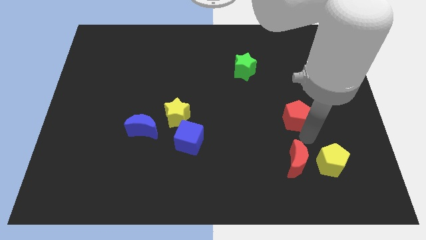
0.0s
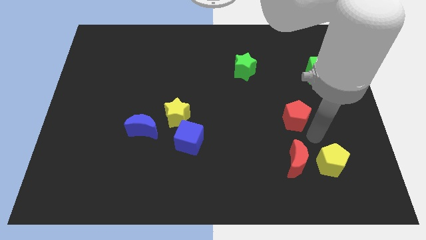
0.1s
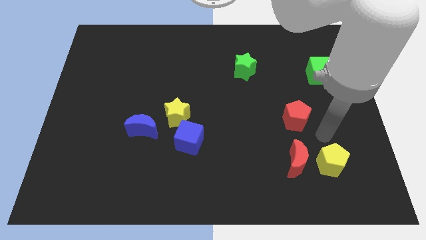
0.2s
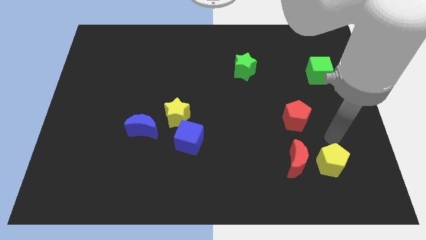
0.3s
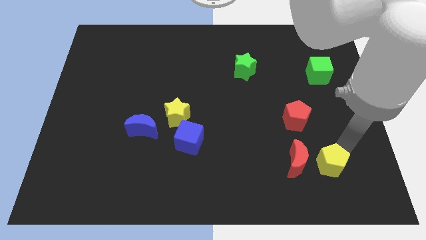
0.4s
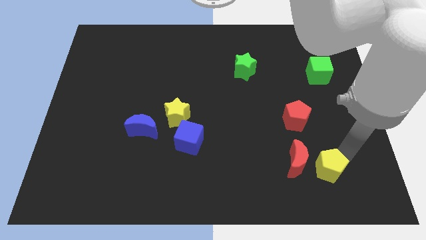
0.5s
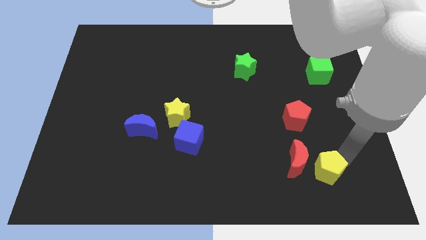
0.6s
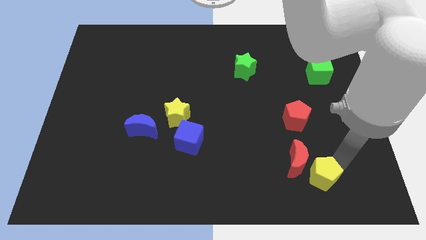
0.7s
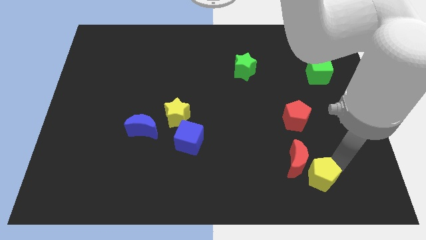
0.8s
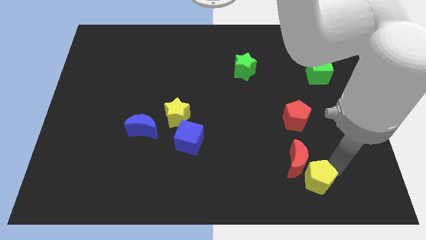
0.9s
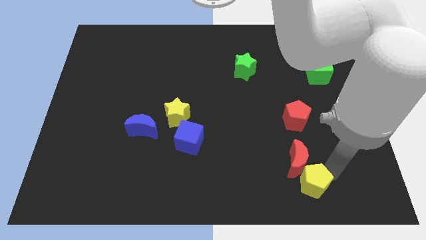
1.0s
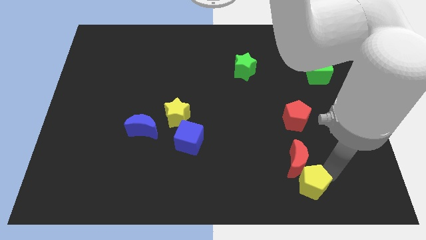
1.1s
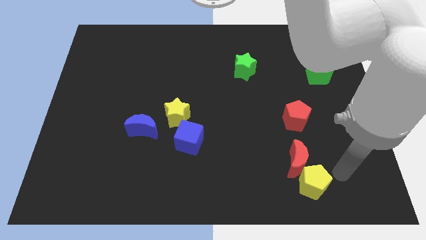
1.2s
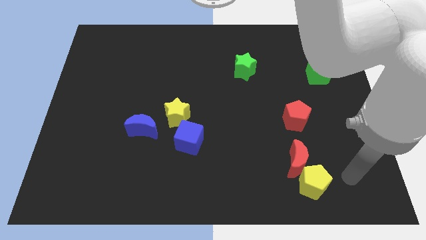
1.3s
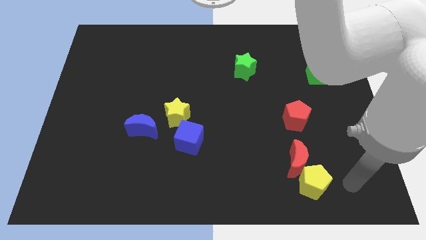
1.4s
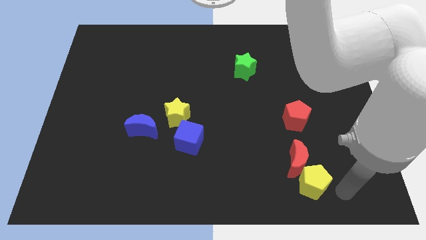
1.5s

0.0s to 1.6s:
move the yellow pentagon slightly downwards

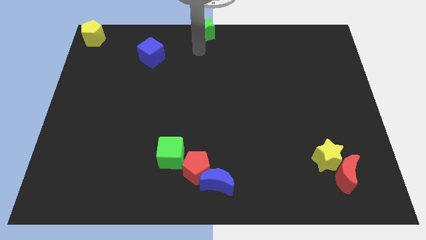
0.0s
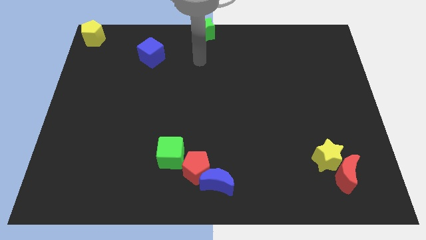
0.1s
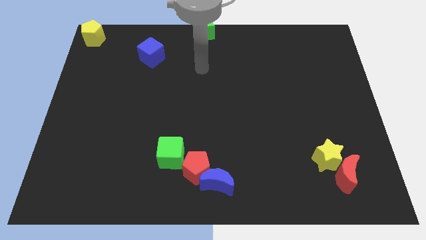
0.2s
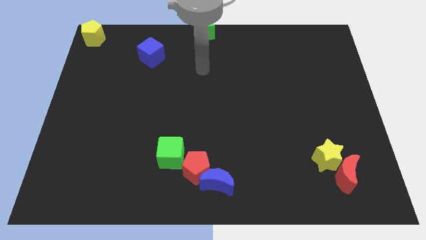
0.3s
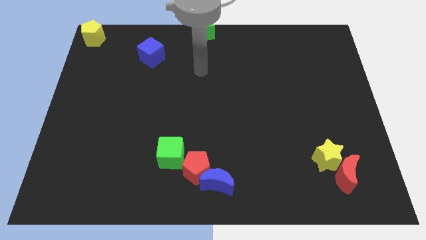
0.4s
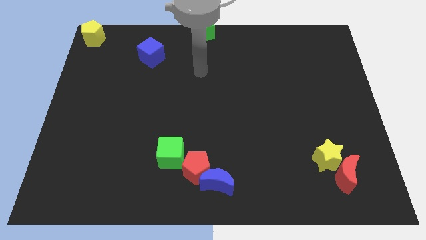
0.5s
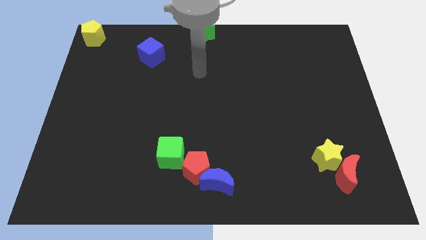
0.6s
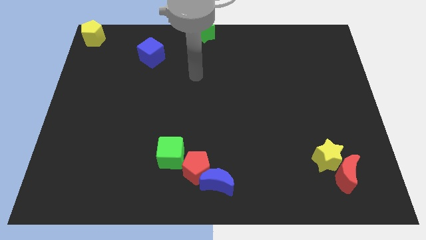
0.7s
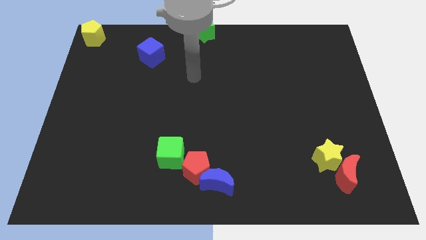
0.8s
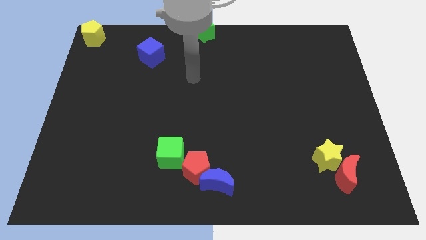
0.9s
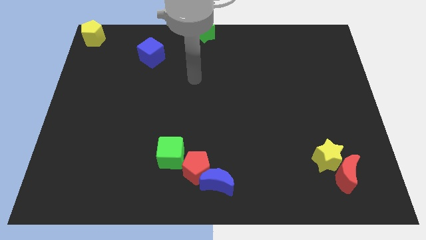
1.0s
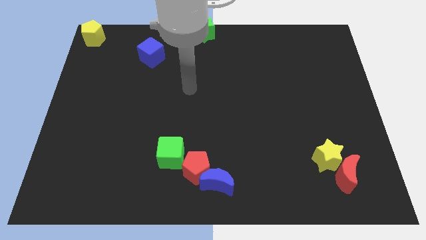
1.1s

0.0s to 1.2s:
move your arm towards the bottom side of the board

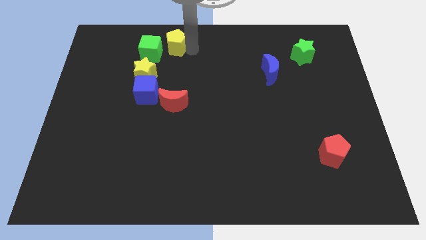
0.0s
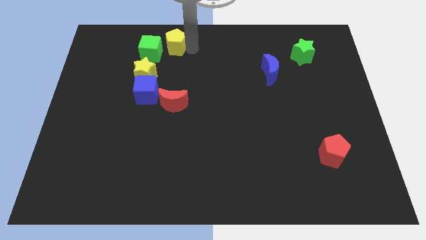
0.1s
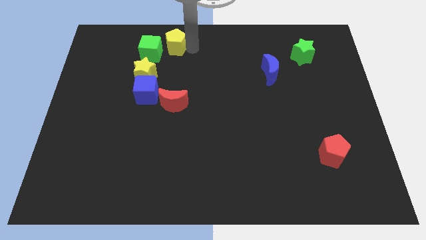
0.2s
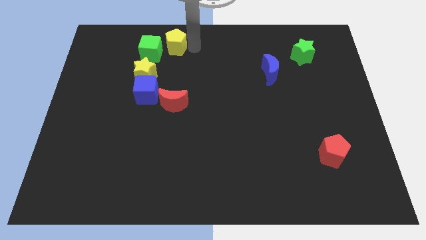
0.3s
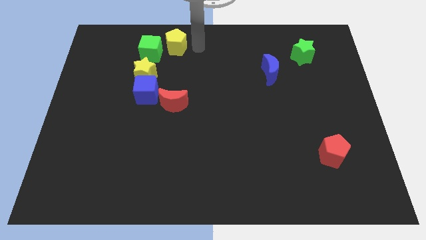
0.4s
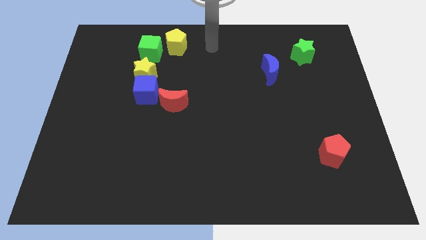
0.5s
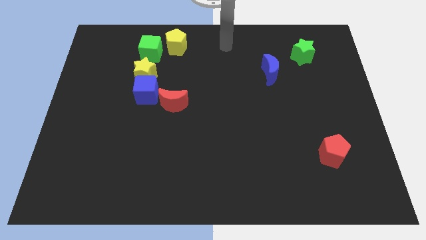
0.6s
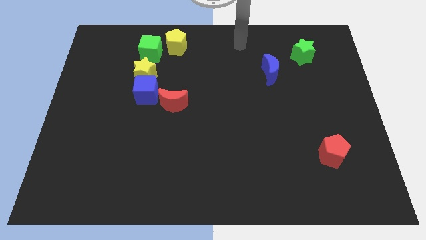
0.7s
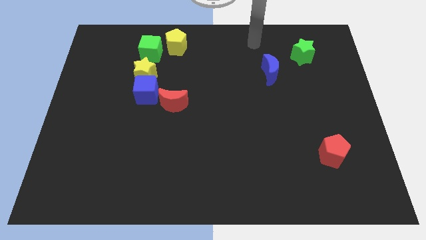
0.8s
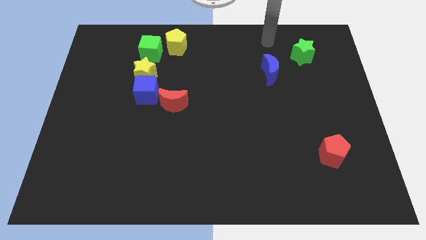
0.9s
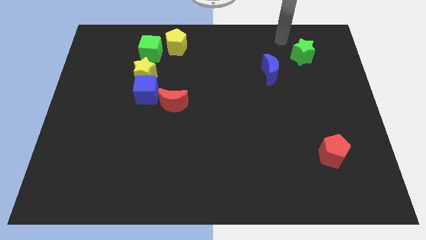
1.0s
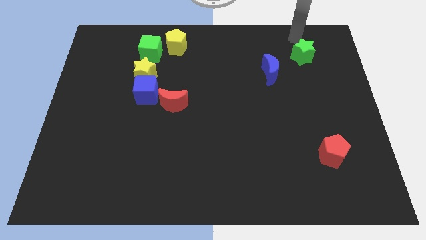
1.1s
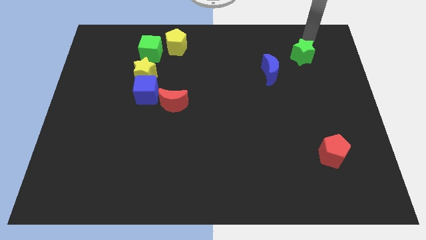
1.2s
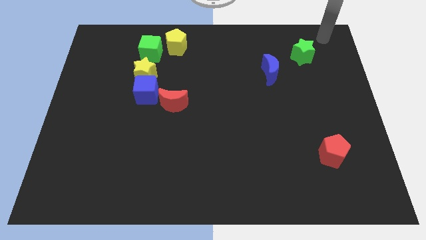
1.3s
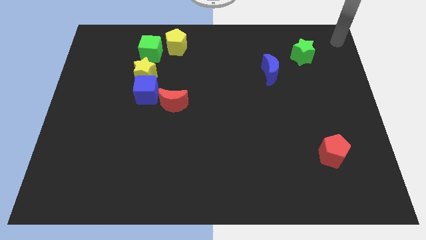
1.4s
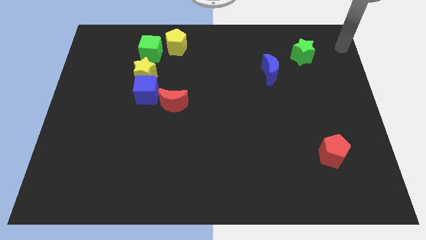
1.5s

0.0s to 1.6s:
move the arm away from the yellow pentagon

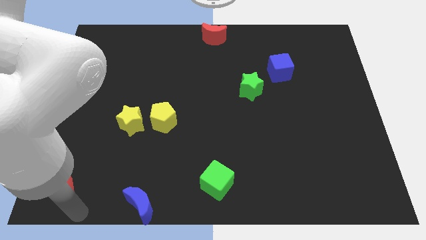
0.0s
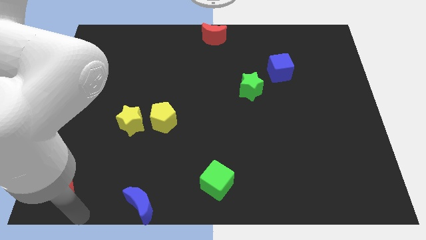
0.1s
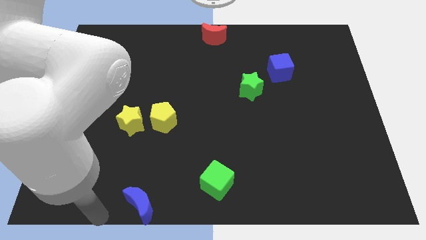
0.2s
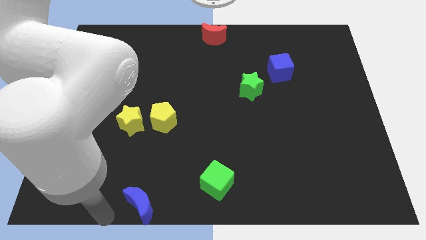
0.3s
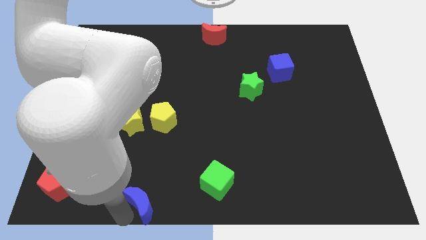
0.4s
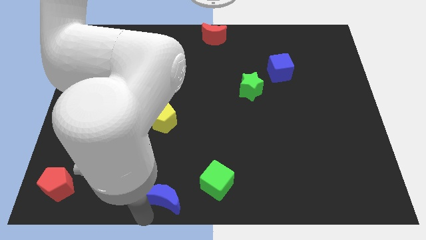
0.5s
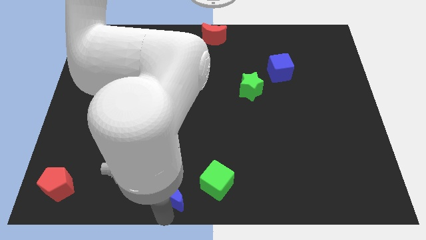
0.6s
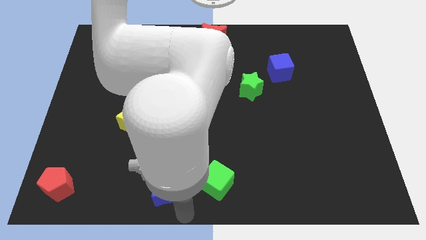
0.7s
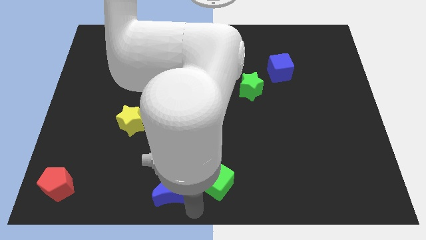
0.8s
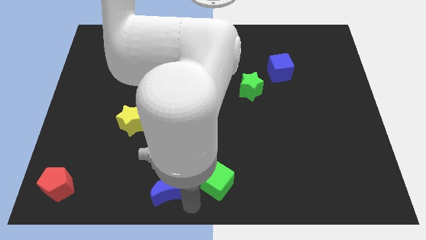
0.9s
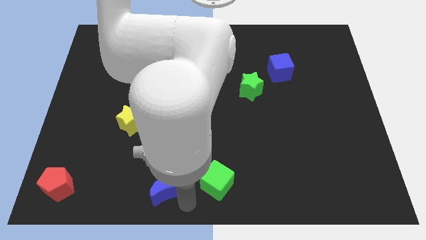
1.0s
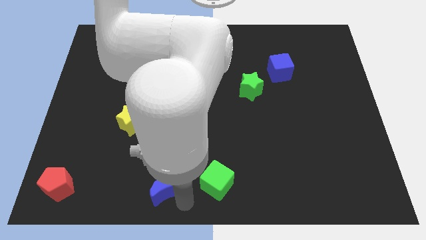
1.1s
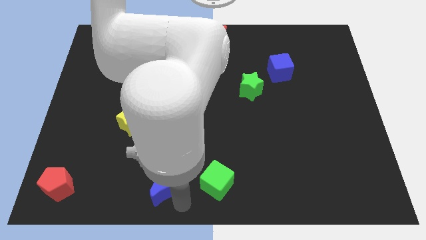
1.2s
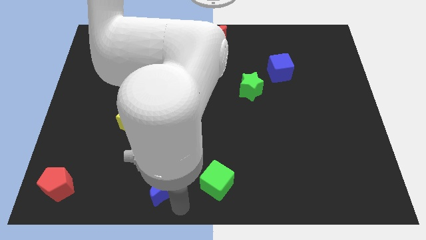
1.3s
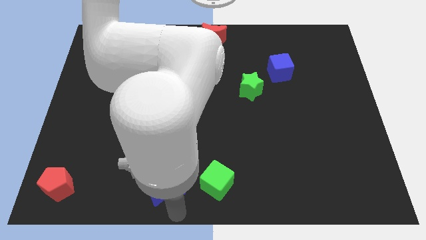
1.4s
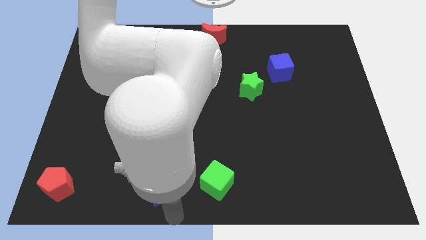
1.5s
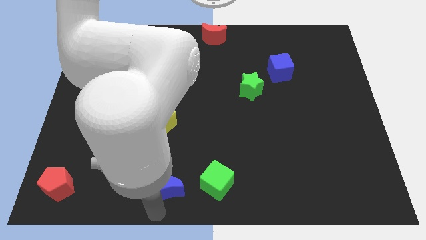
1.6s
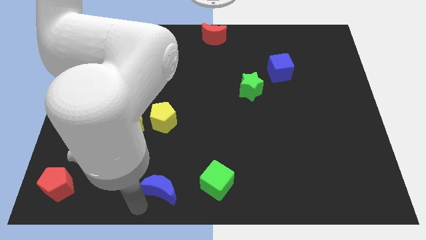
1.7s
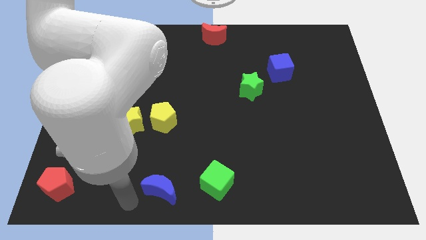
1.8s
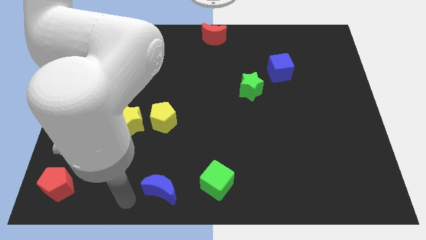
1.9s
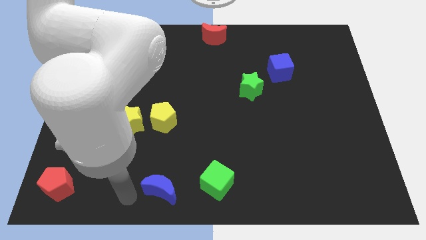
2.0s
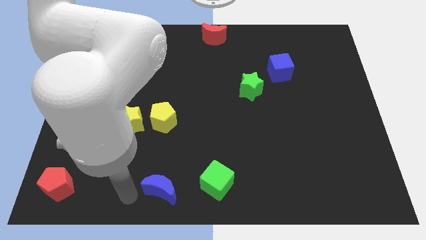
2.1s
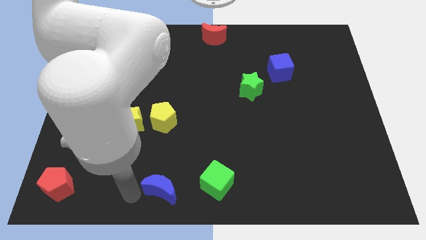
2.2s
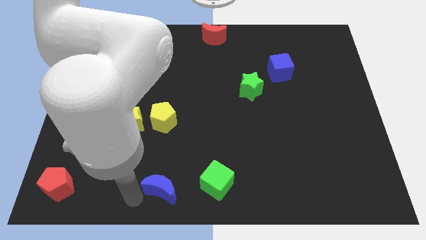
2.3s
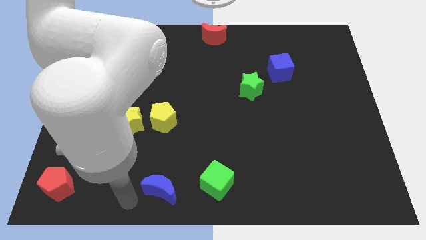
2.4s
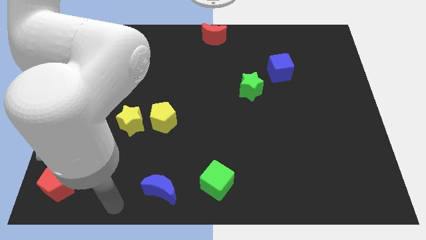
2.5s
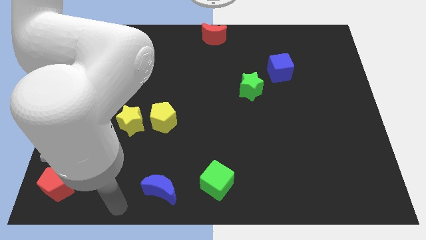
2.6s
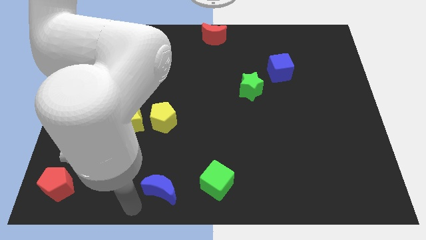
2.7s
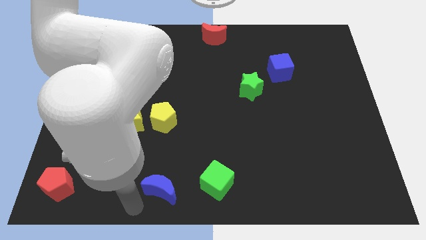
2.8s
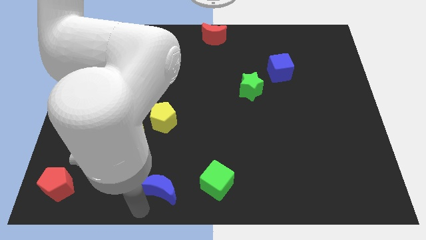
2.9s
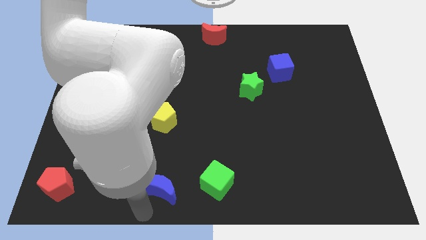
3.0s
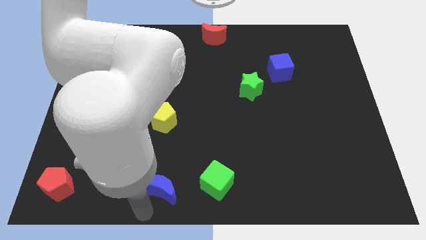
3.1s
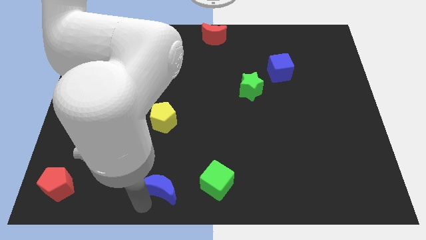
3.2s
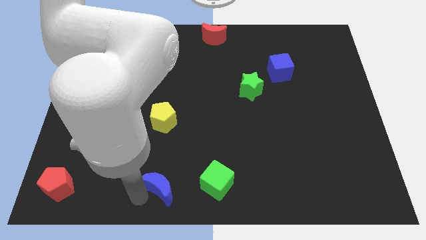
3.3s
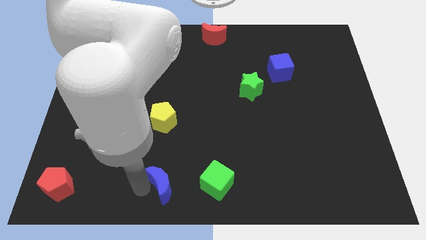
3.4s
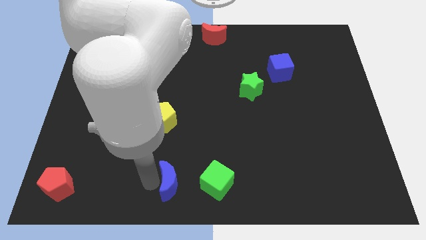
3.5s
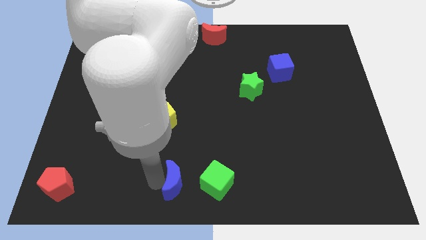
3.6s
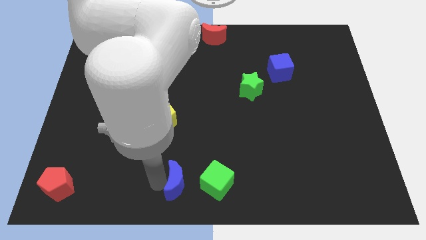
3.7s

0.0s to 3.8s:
move the blue moon on the left side of the green cube horizontally

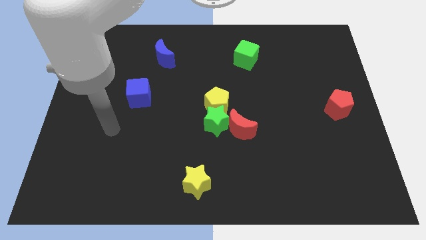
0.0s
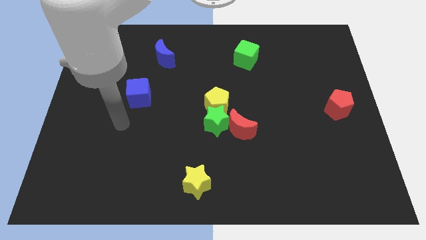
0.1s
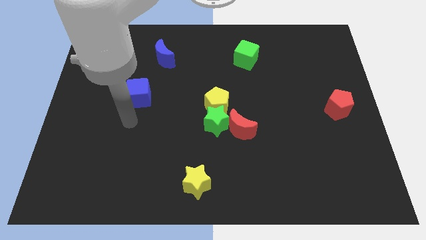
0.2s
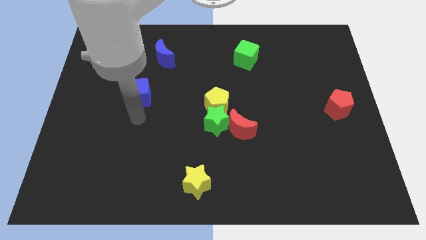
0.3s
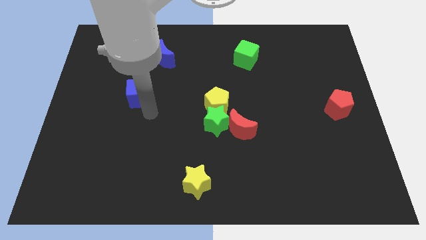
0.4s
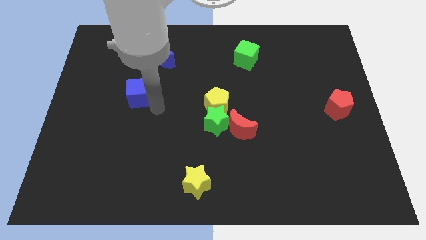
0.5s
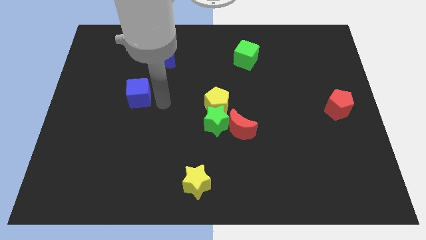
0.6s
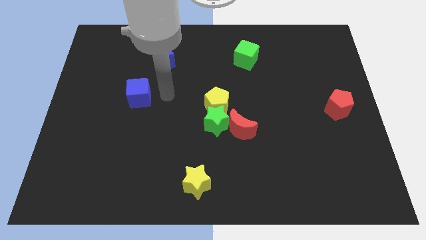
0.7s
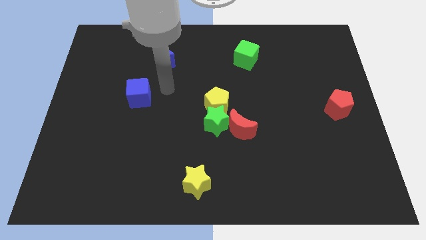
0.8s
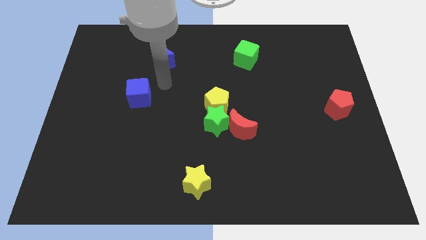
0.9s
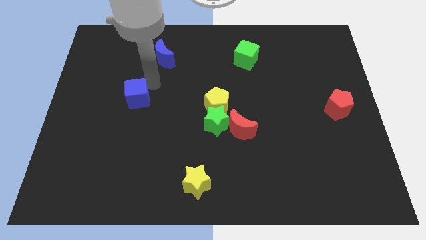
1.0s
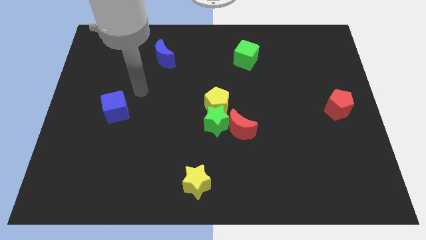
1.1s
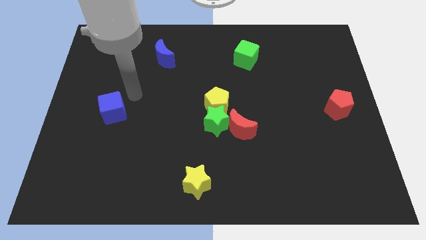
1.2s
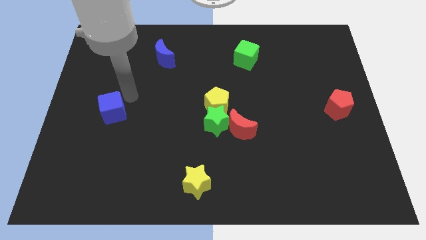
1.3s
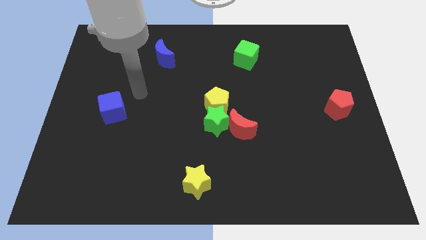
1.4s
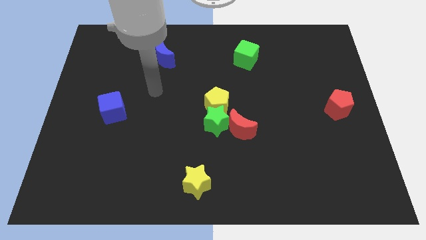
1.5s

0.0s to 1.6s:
move blue cube slightly towards left center of the board
